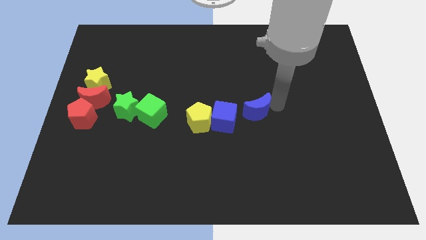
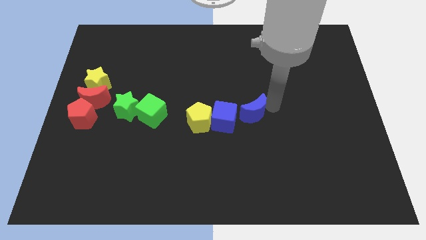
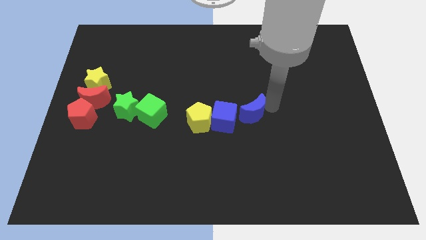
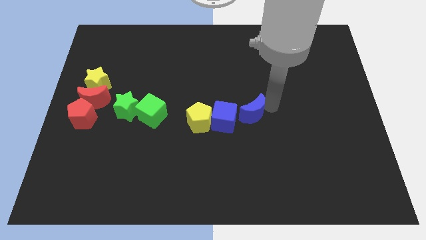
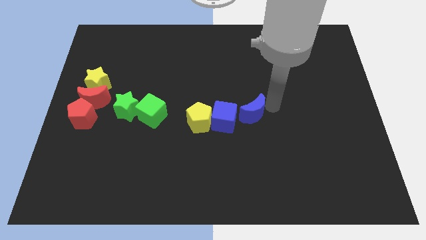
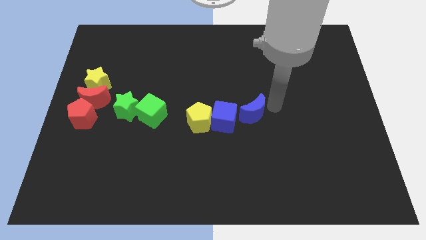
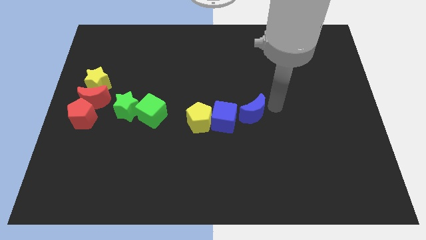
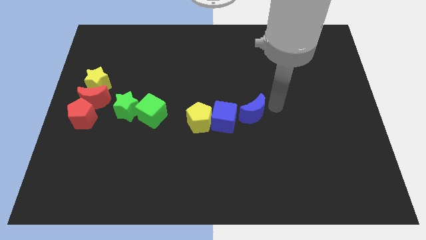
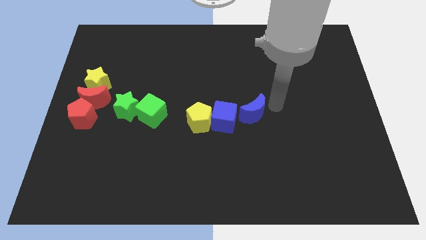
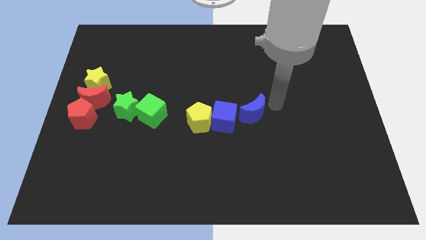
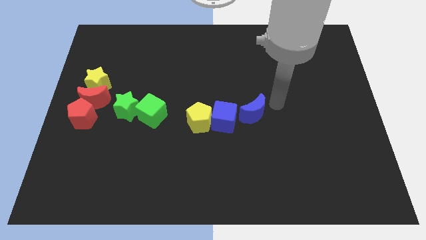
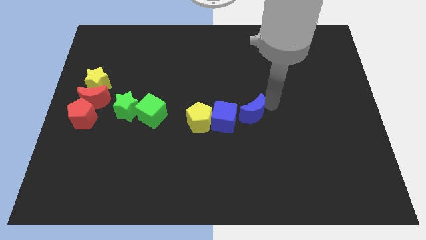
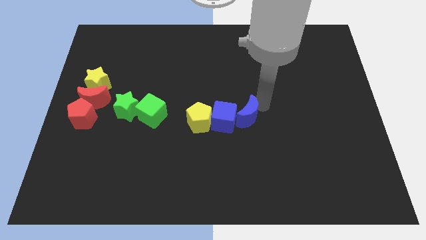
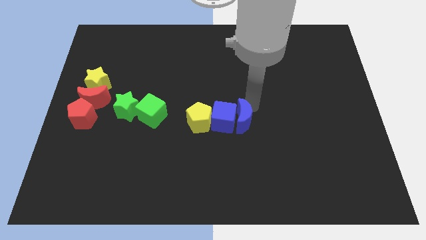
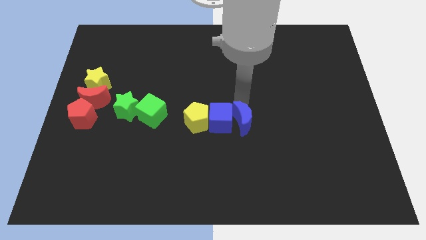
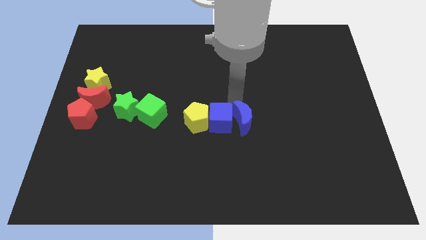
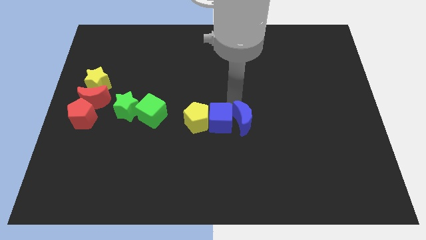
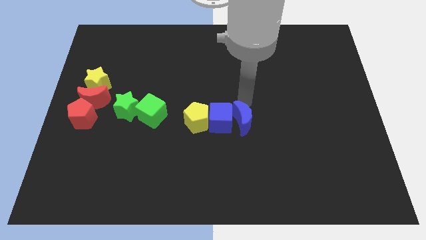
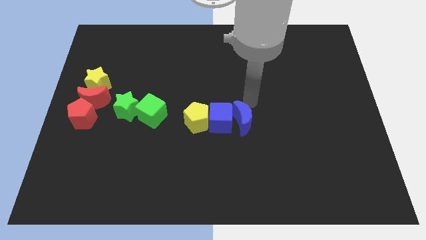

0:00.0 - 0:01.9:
move the blue crescent to the right side of the blue cube

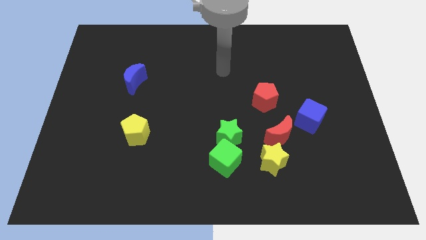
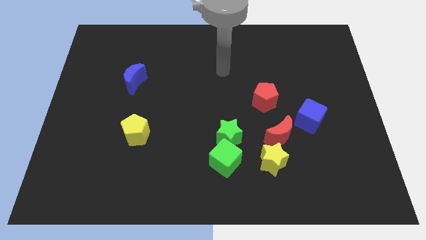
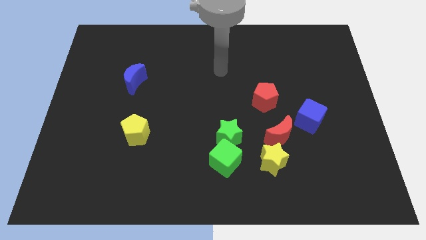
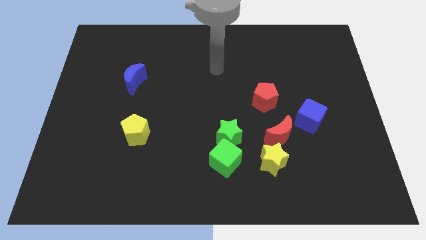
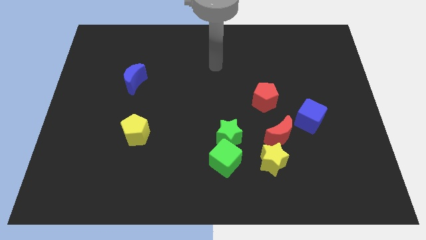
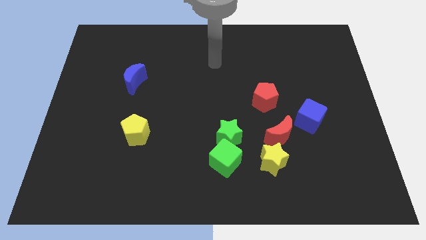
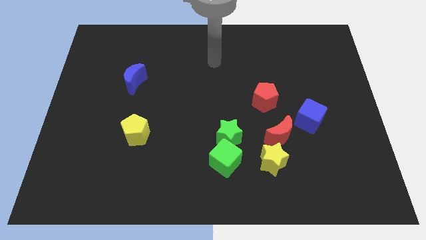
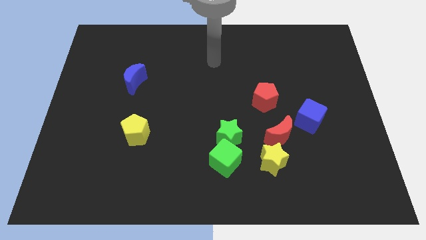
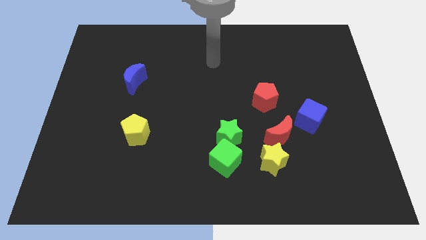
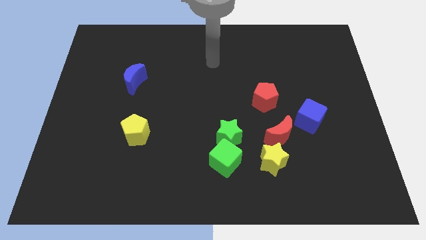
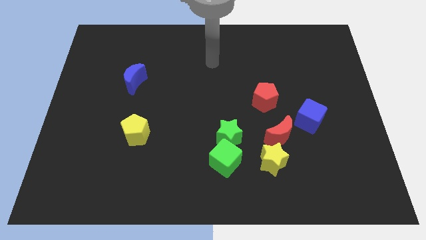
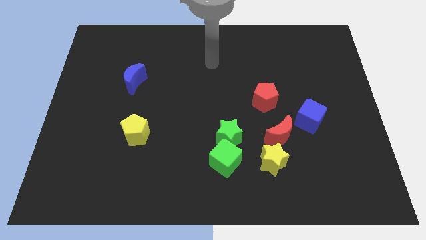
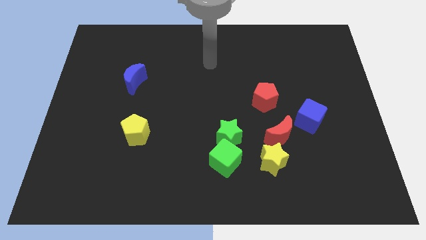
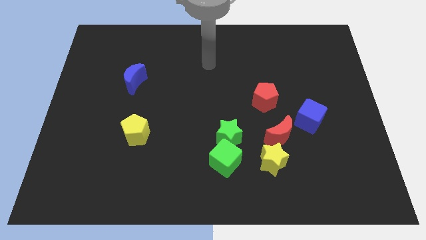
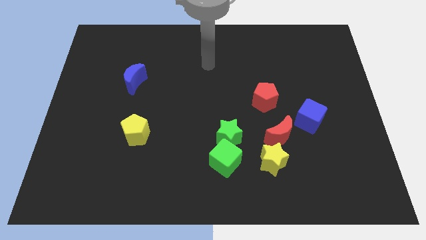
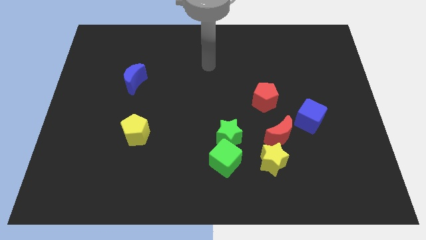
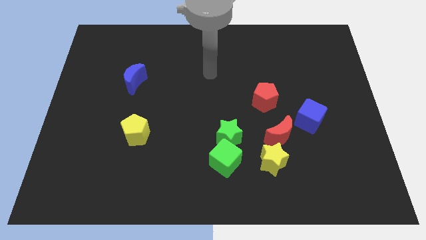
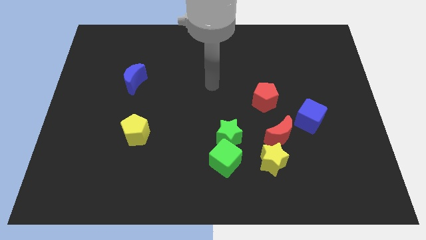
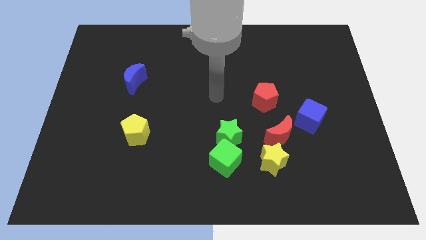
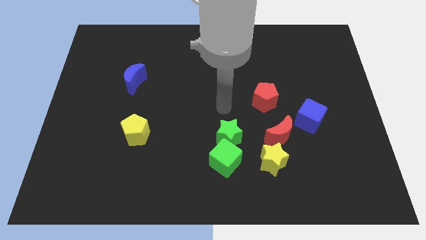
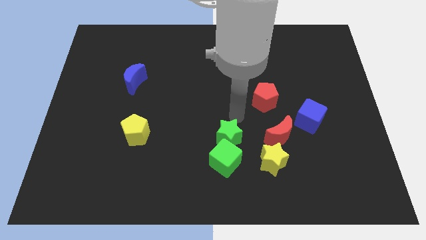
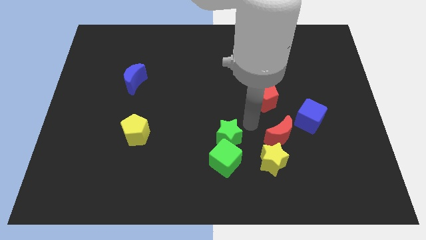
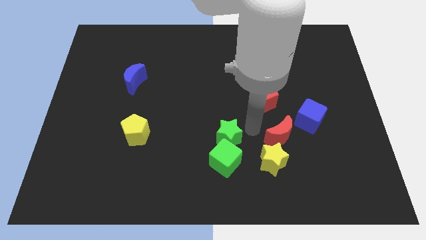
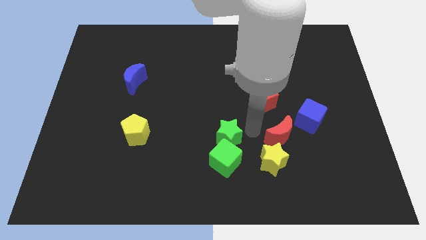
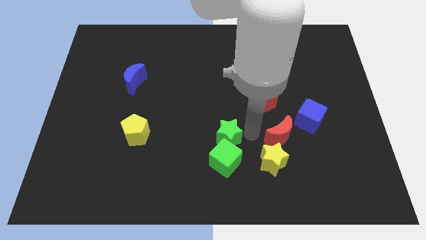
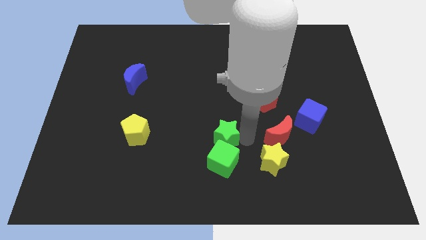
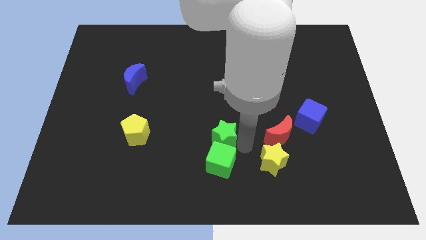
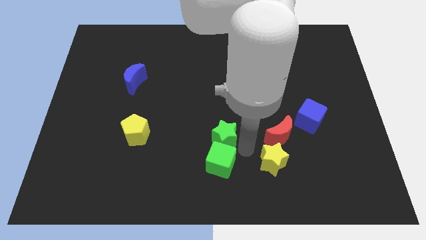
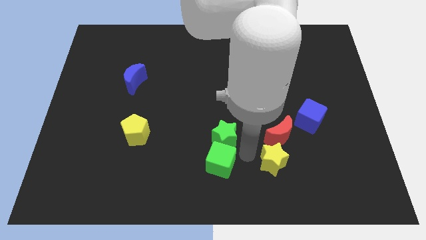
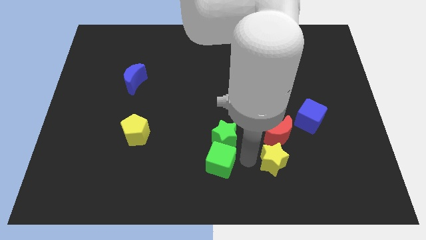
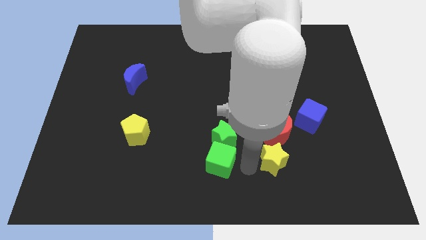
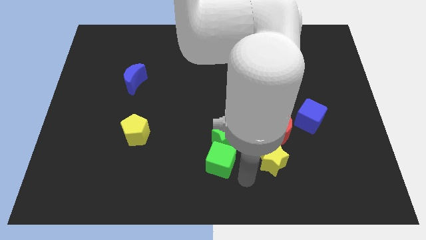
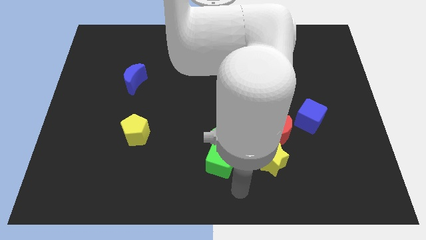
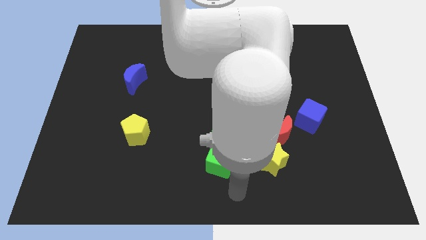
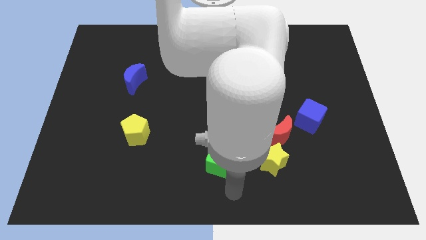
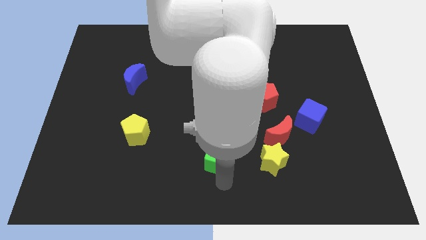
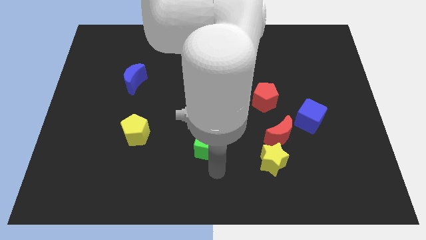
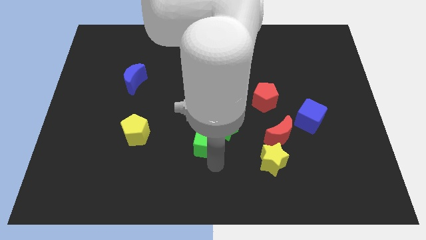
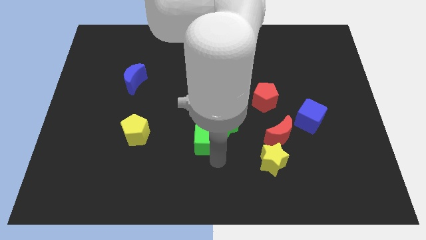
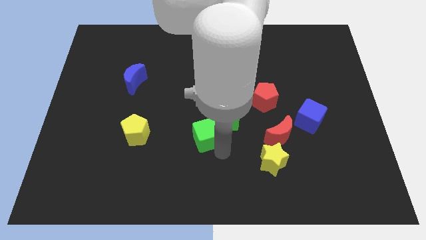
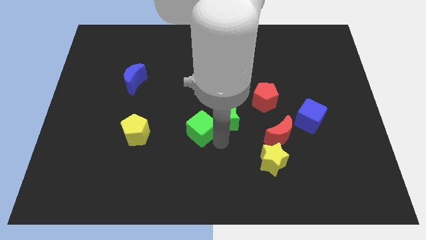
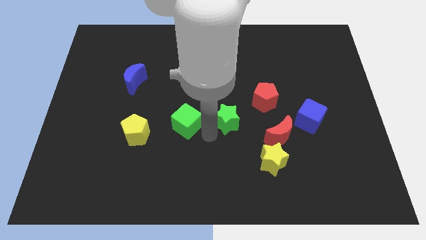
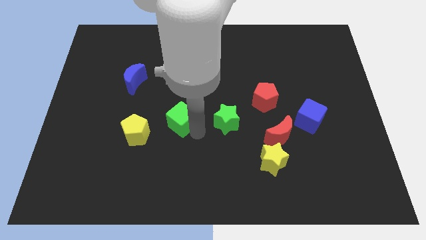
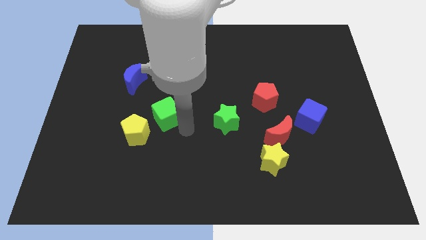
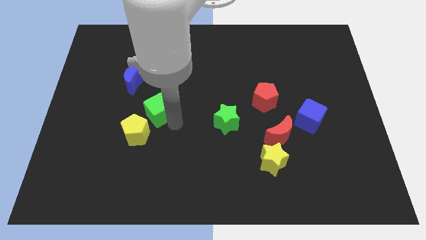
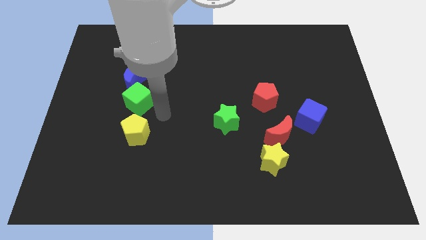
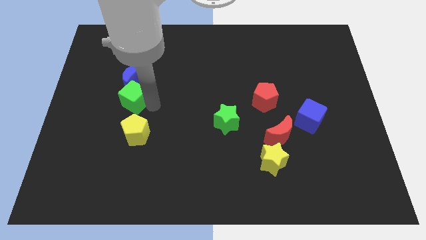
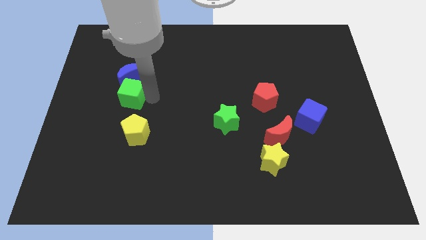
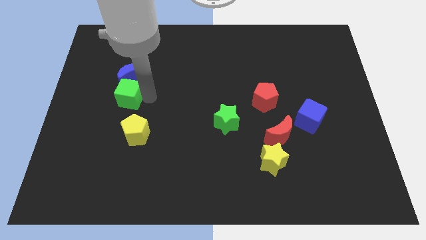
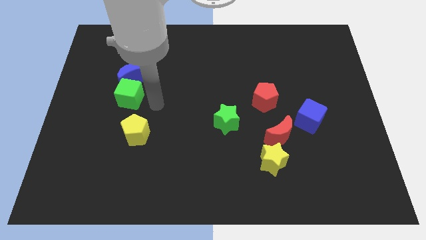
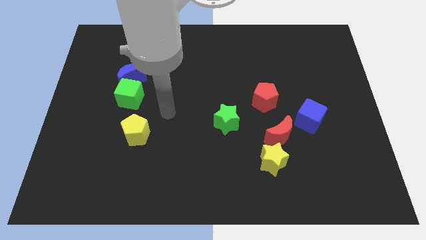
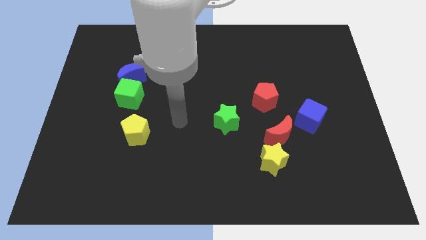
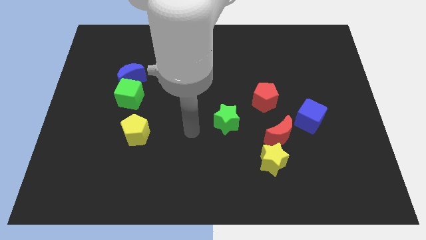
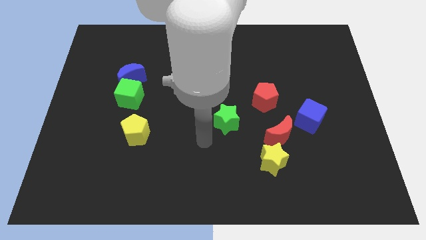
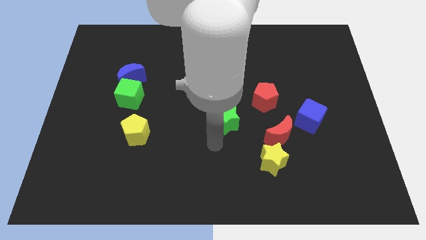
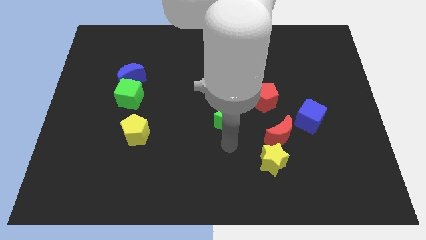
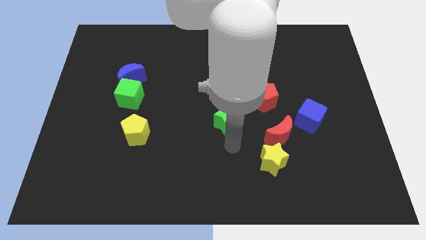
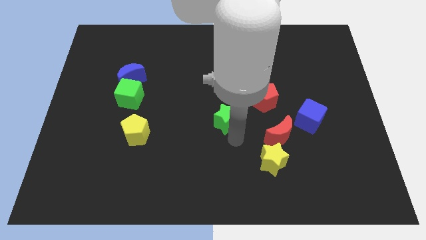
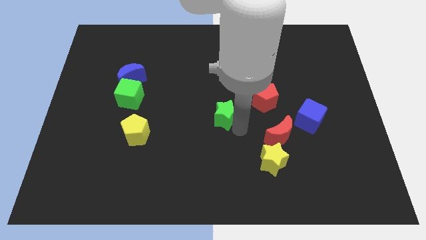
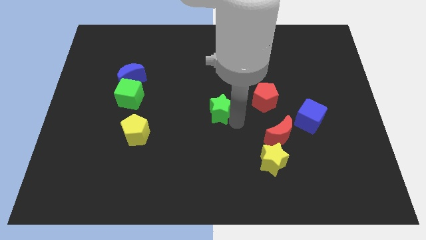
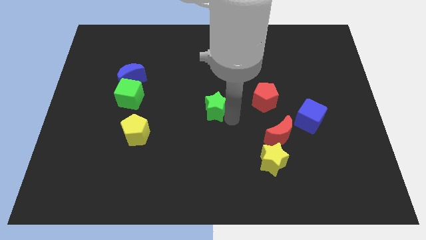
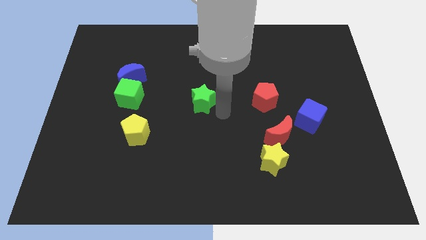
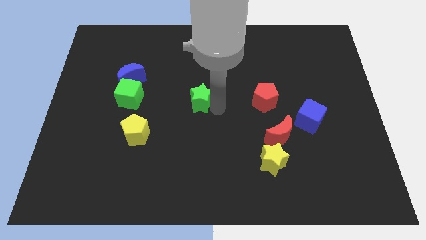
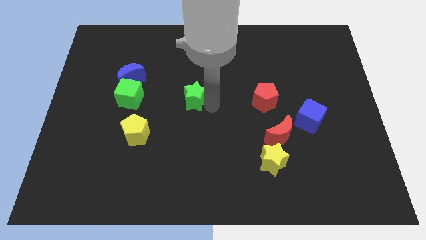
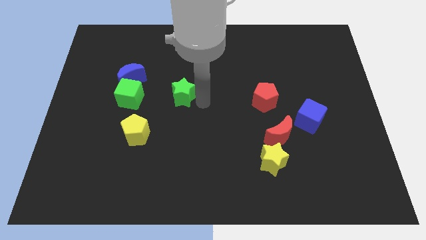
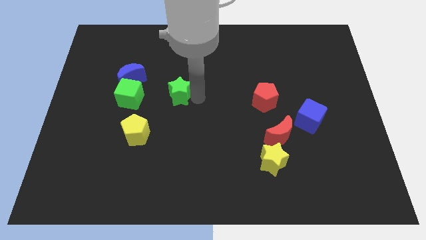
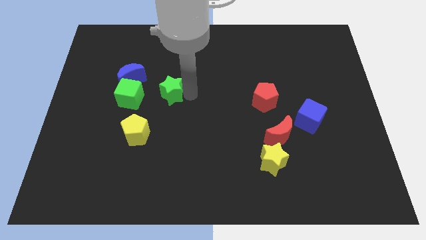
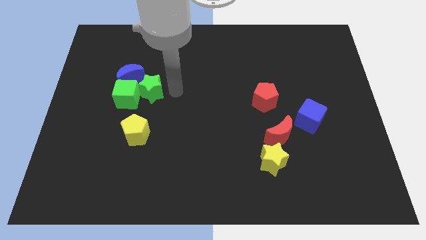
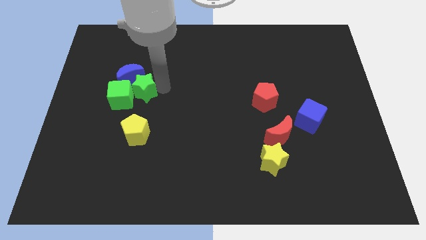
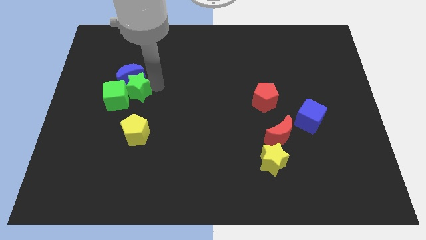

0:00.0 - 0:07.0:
place the green blocks below the blue crescent

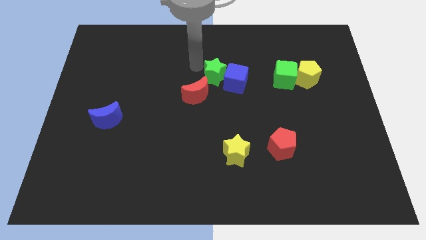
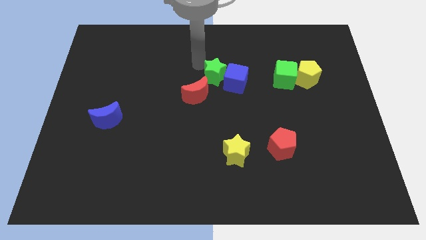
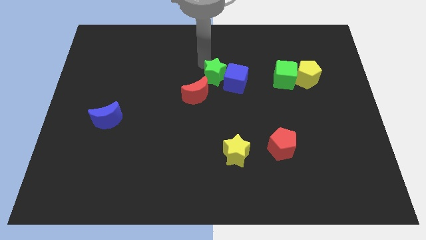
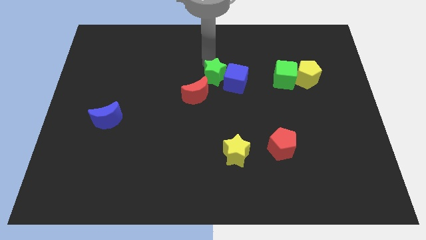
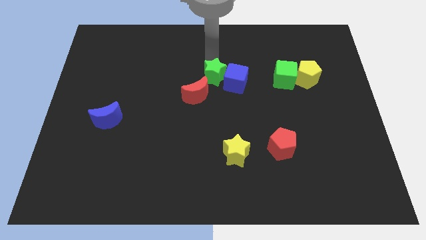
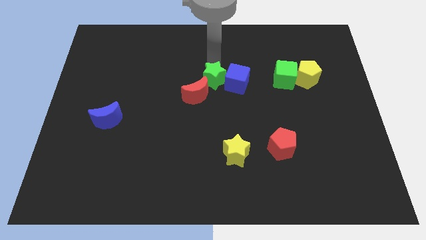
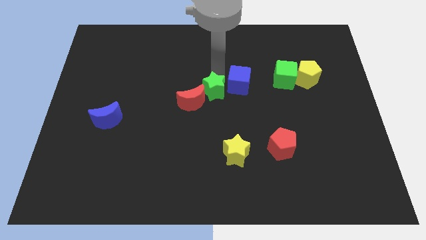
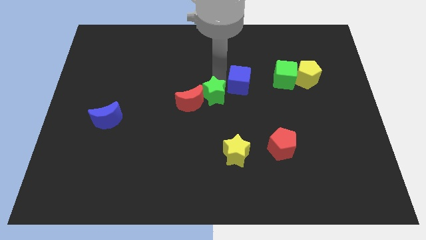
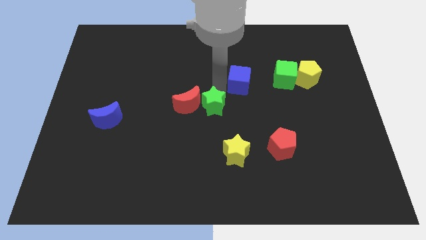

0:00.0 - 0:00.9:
push green star downwards
